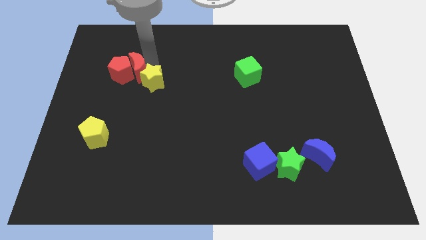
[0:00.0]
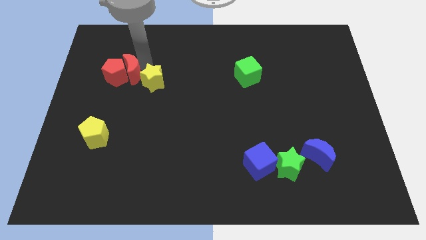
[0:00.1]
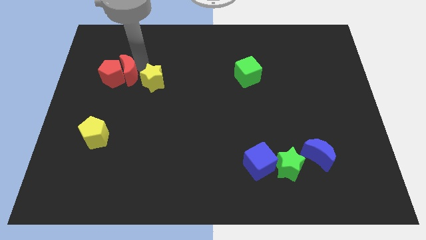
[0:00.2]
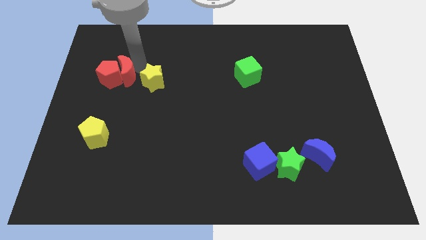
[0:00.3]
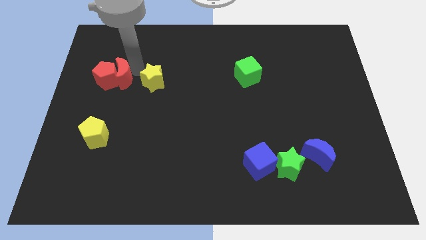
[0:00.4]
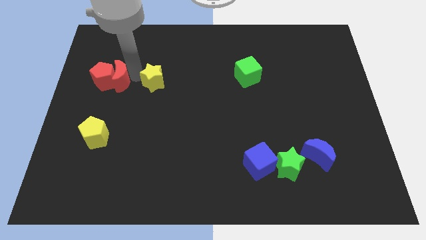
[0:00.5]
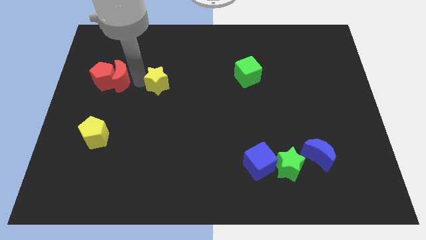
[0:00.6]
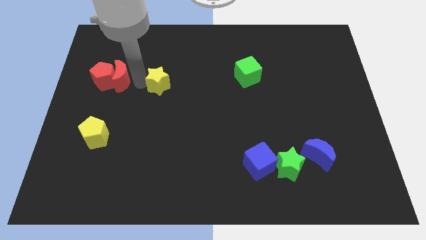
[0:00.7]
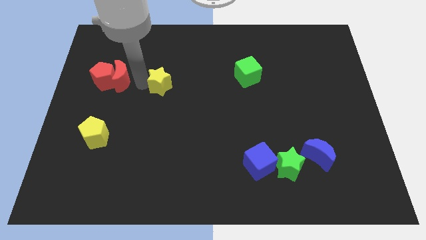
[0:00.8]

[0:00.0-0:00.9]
separate the group of red block from the yellow star

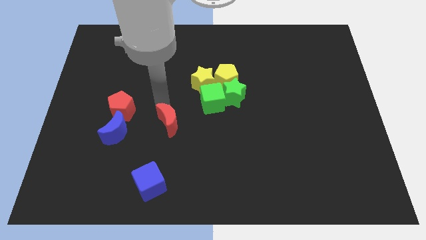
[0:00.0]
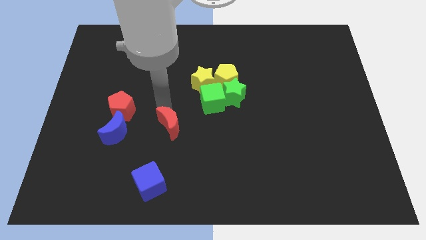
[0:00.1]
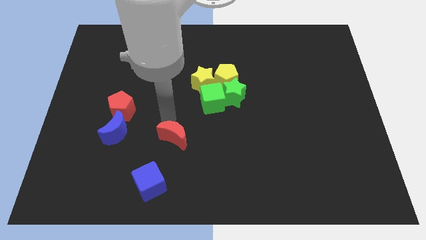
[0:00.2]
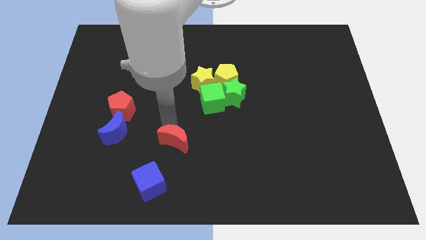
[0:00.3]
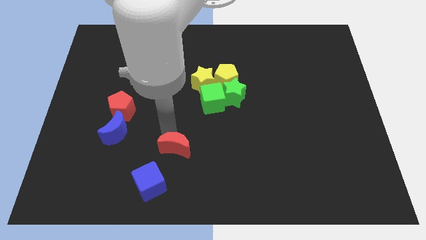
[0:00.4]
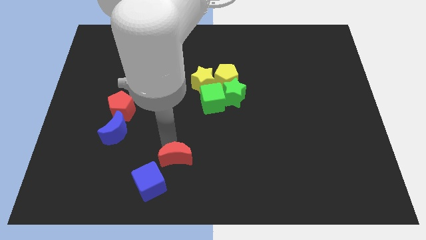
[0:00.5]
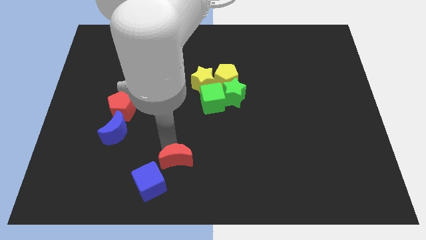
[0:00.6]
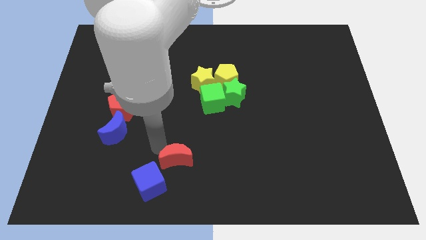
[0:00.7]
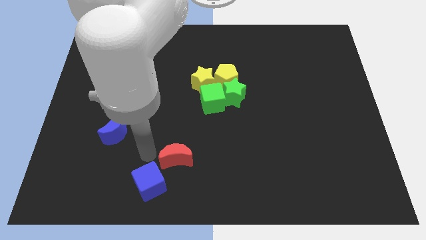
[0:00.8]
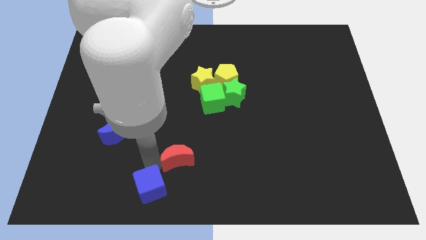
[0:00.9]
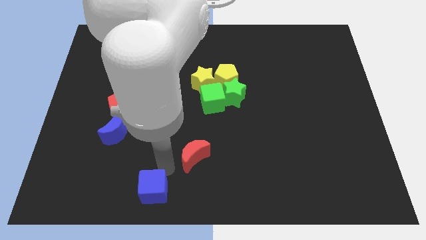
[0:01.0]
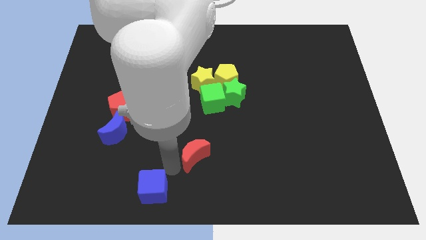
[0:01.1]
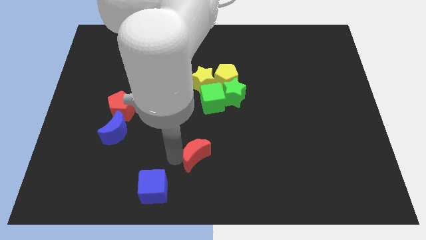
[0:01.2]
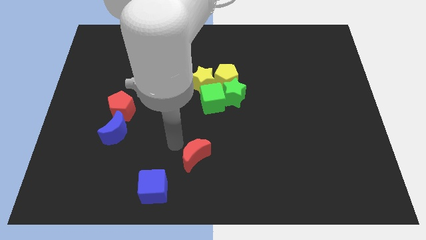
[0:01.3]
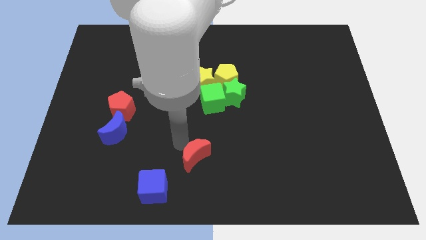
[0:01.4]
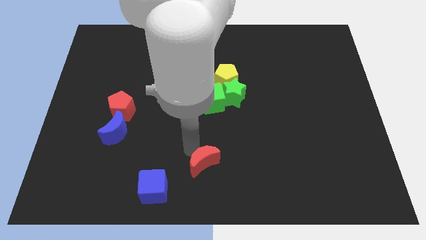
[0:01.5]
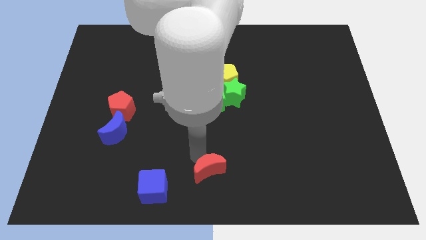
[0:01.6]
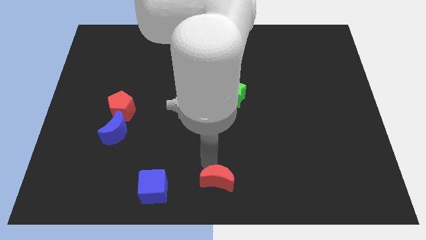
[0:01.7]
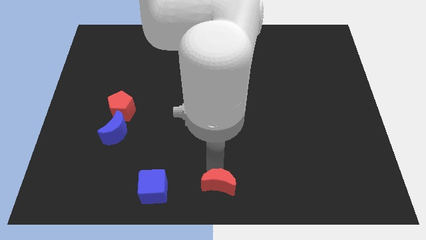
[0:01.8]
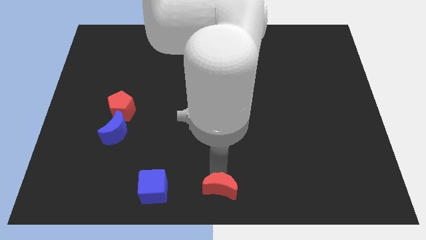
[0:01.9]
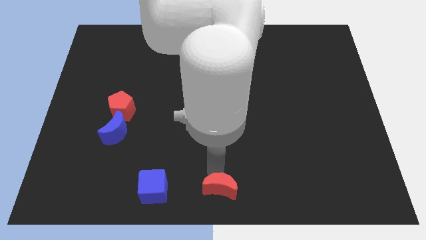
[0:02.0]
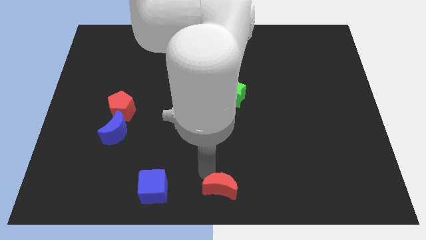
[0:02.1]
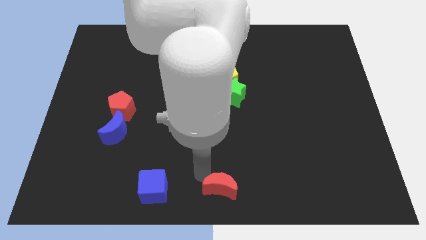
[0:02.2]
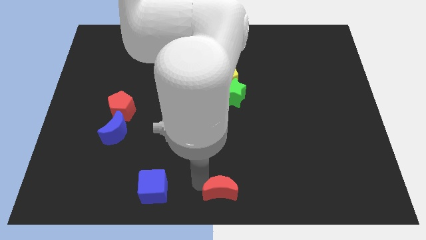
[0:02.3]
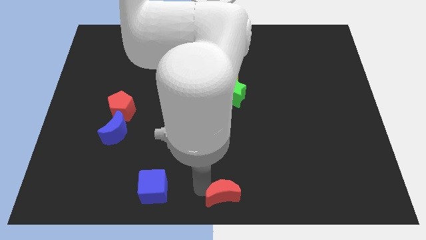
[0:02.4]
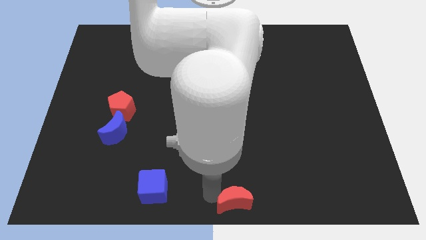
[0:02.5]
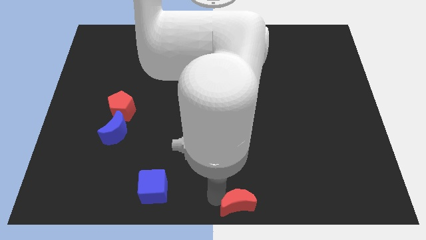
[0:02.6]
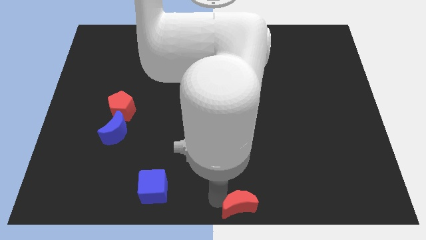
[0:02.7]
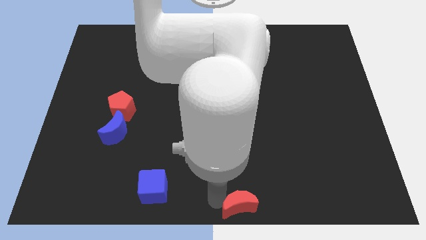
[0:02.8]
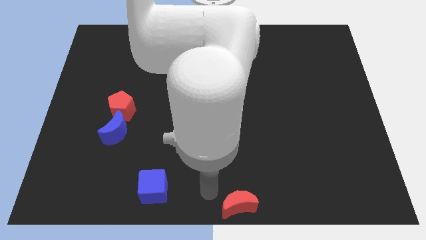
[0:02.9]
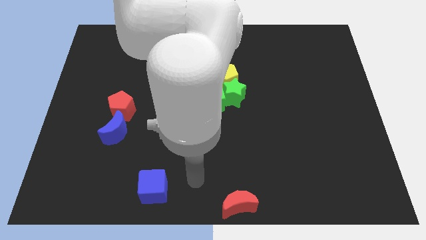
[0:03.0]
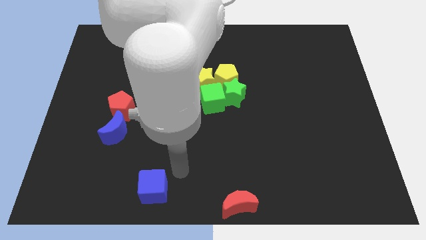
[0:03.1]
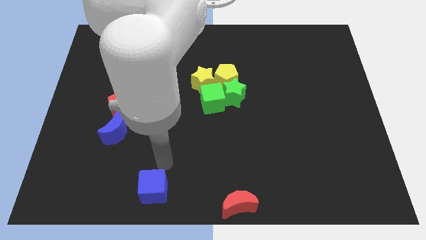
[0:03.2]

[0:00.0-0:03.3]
push the red crescent at the bottom side of the group of blocks

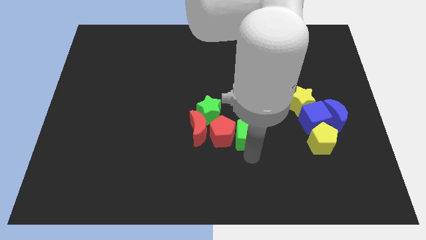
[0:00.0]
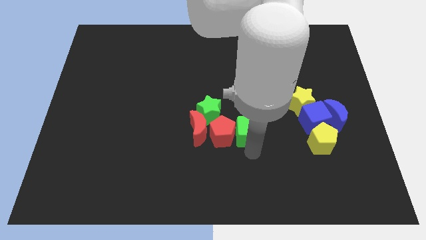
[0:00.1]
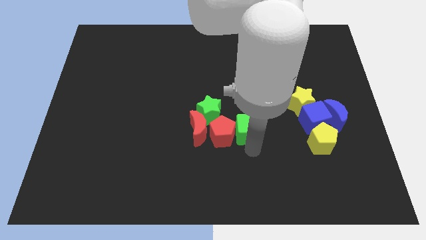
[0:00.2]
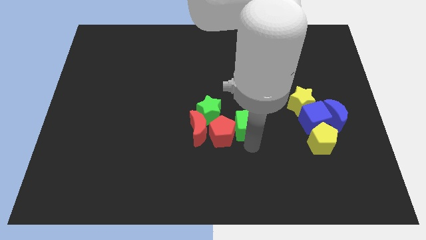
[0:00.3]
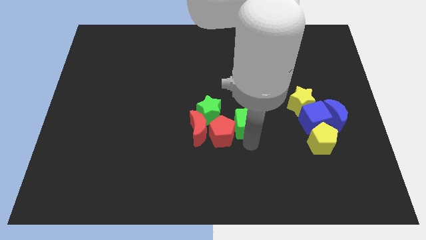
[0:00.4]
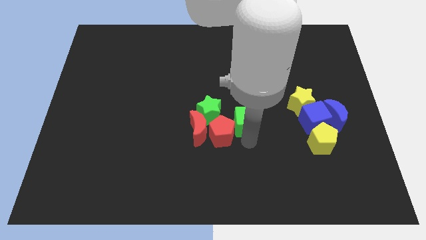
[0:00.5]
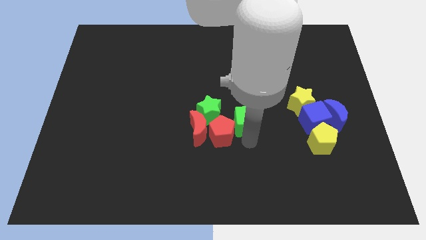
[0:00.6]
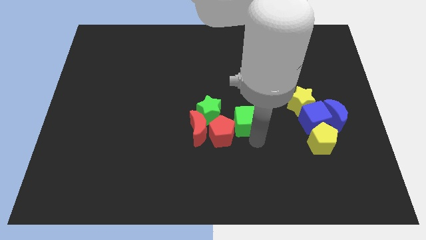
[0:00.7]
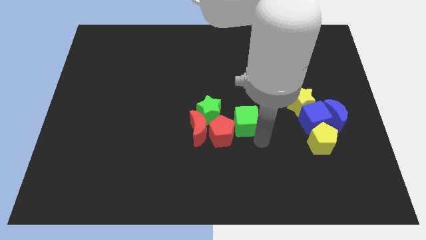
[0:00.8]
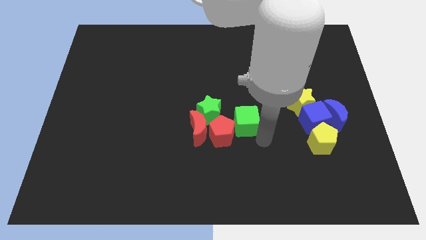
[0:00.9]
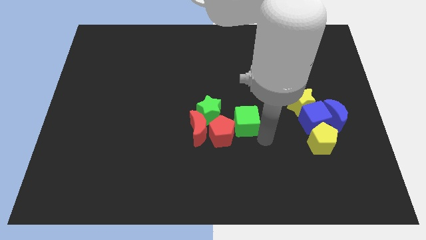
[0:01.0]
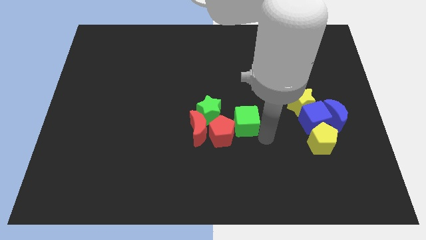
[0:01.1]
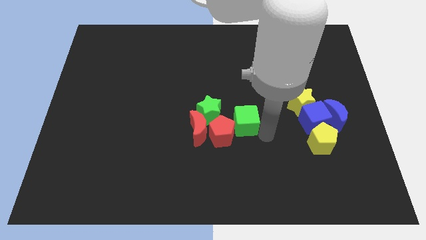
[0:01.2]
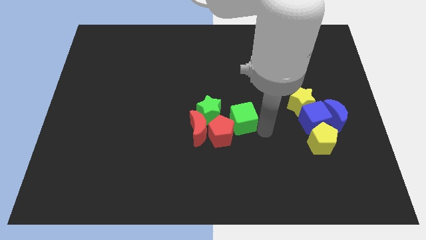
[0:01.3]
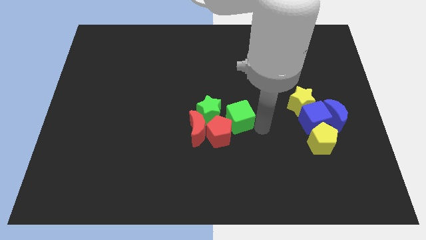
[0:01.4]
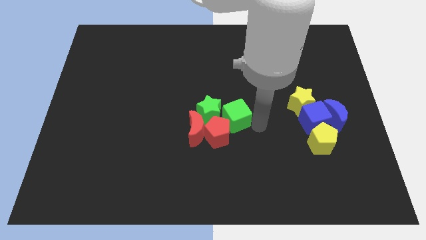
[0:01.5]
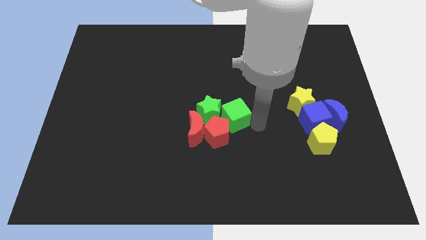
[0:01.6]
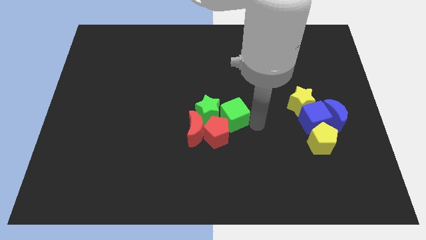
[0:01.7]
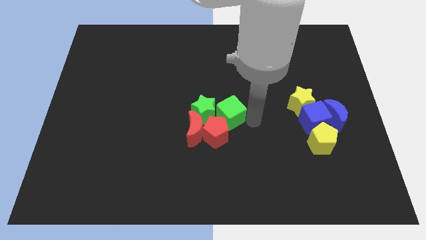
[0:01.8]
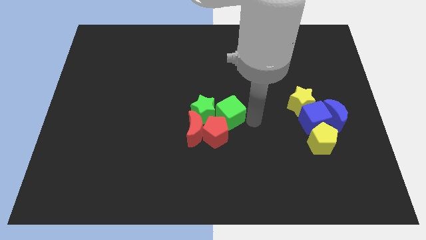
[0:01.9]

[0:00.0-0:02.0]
push the green cube to the right of the green star

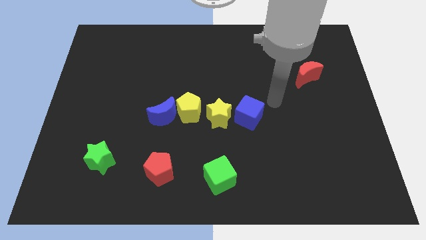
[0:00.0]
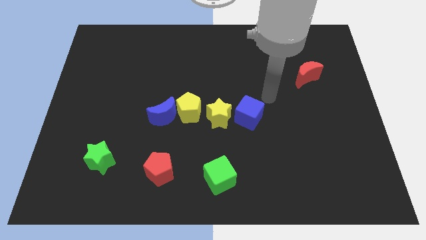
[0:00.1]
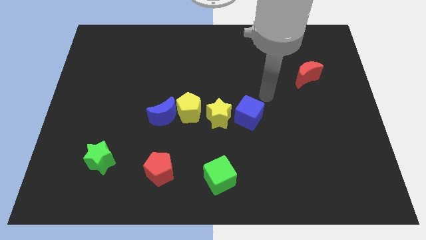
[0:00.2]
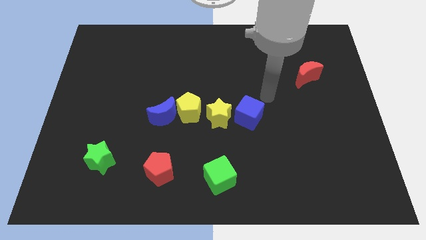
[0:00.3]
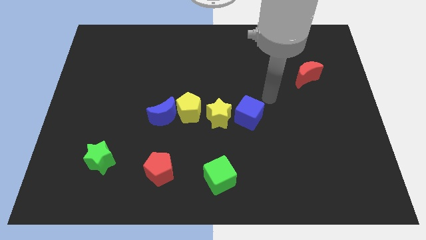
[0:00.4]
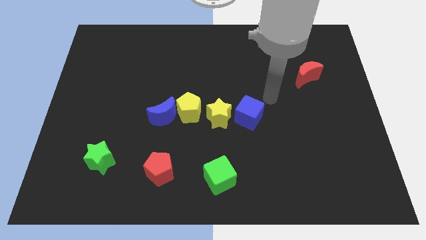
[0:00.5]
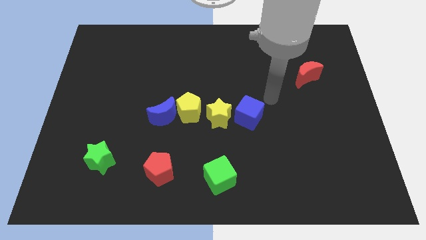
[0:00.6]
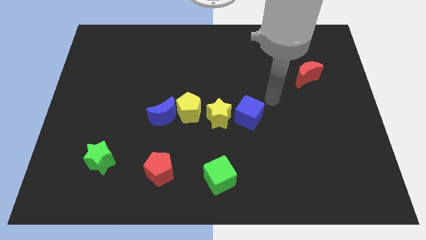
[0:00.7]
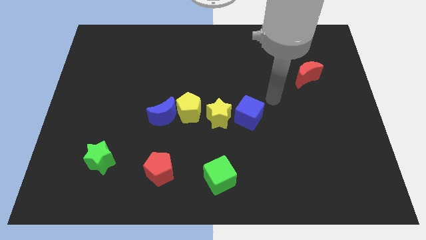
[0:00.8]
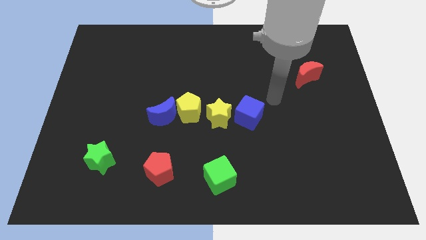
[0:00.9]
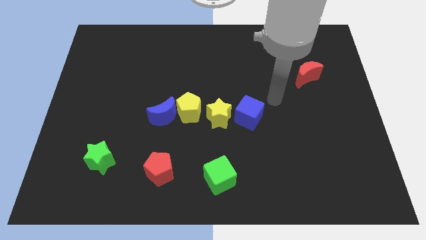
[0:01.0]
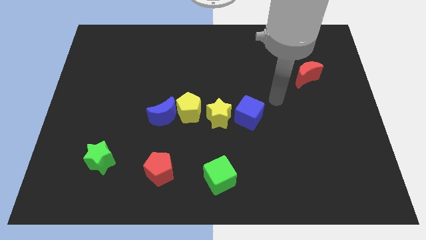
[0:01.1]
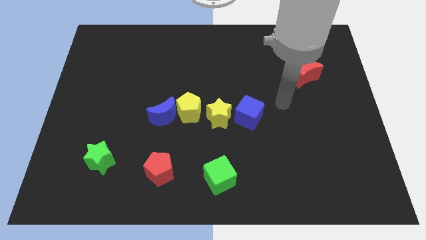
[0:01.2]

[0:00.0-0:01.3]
place your arm in between the red crescent and the blue cube

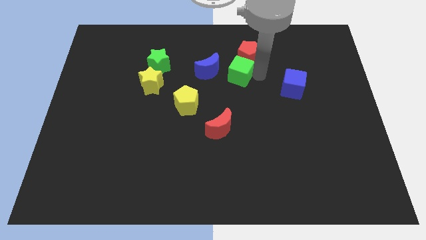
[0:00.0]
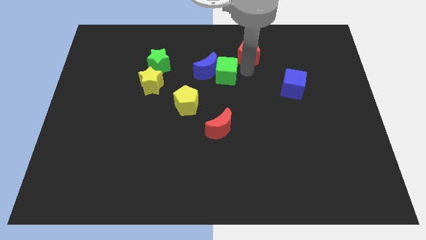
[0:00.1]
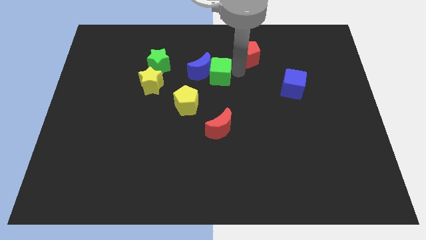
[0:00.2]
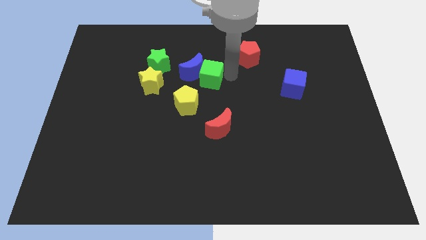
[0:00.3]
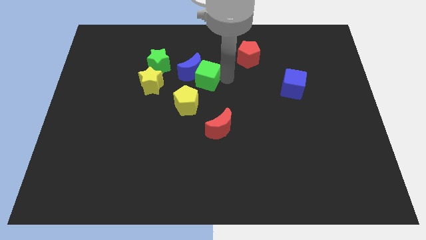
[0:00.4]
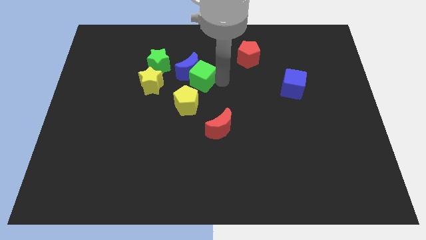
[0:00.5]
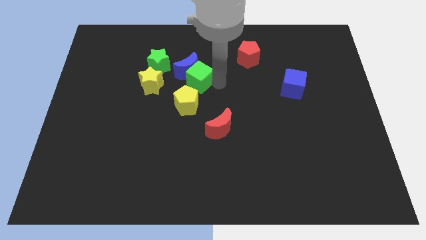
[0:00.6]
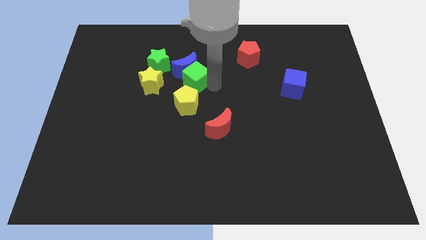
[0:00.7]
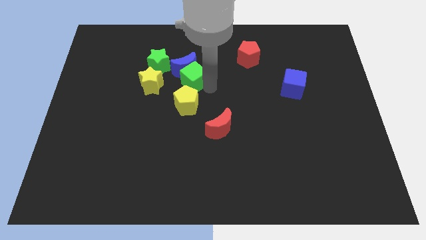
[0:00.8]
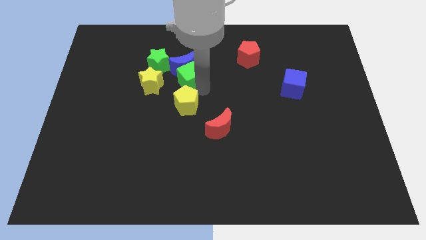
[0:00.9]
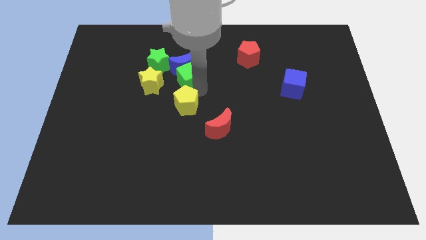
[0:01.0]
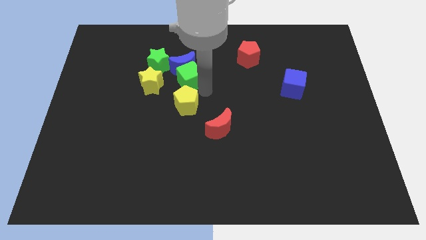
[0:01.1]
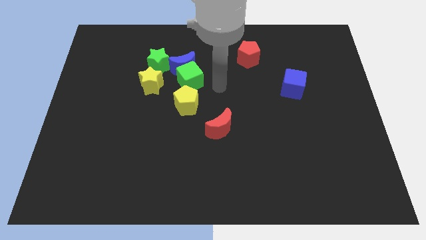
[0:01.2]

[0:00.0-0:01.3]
place green cube to the top of yellow pentagon

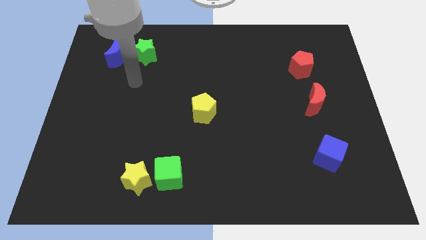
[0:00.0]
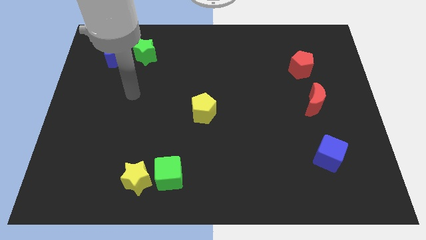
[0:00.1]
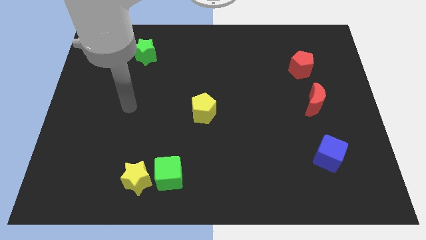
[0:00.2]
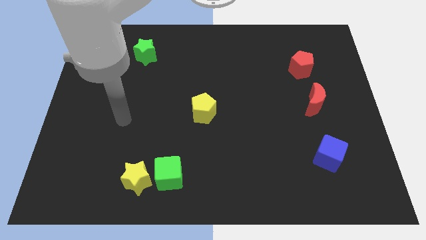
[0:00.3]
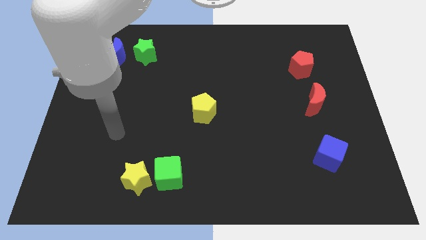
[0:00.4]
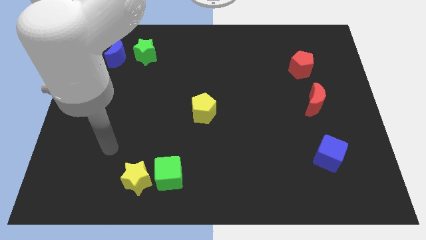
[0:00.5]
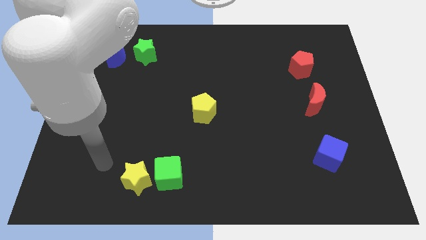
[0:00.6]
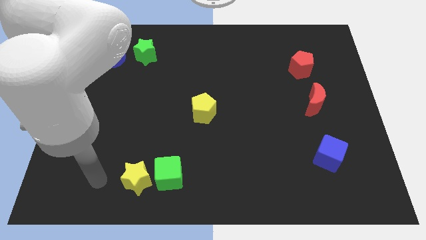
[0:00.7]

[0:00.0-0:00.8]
point your arm at the left of the yellow star
